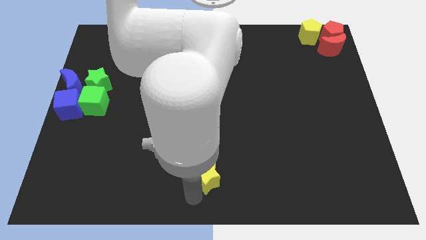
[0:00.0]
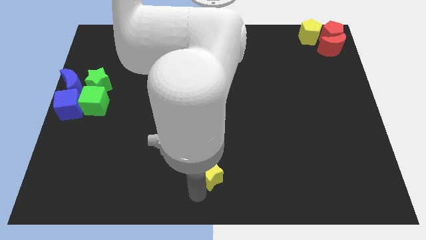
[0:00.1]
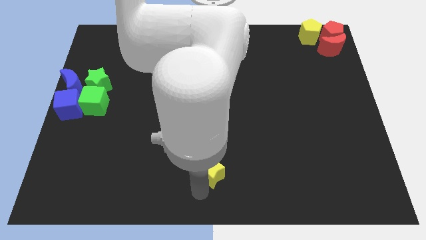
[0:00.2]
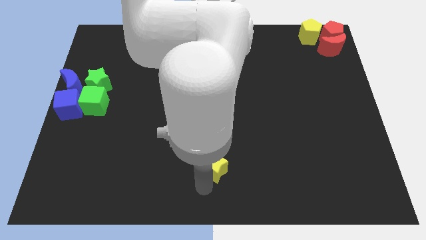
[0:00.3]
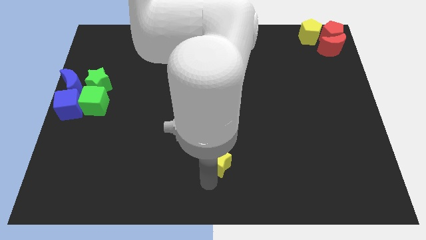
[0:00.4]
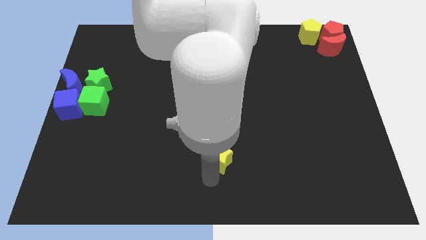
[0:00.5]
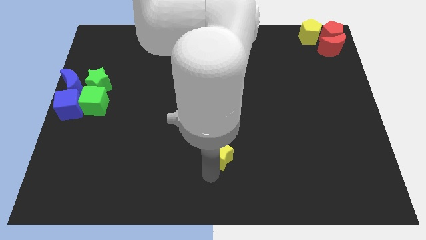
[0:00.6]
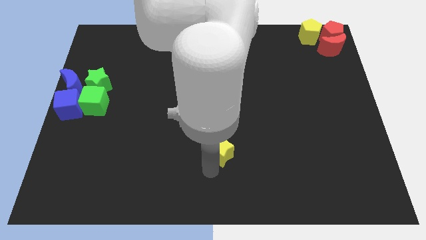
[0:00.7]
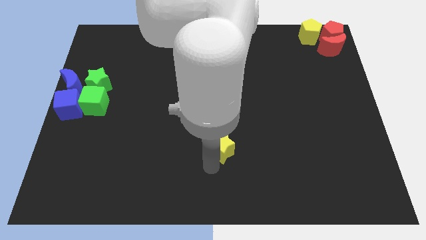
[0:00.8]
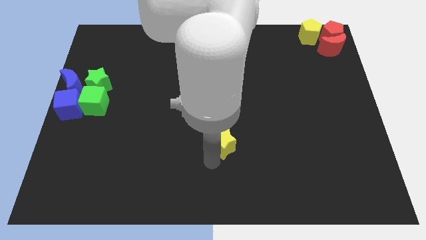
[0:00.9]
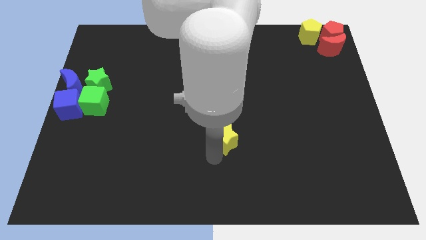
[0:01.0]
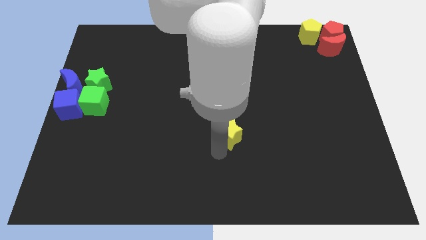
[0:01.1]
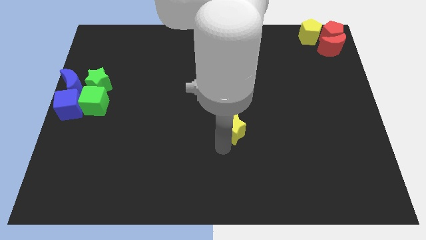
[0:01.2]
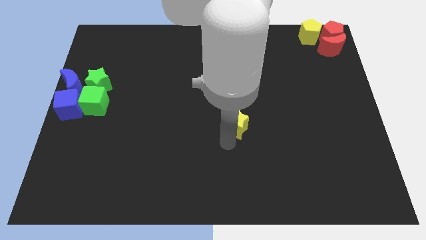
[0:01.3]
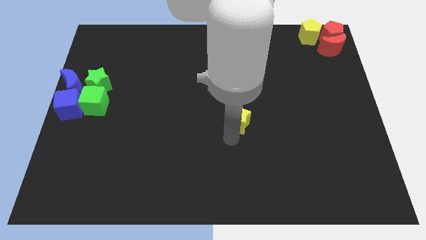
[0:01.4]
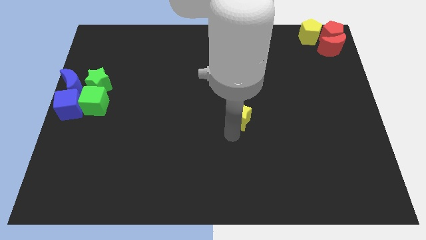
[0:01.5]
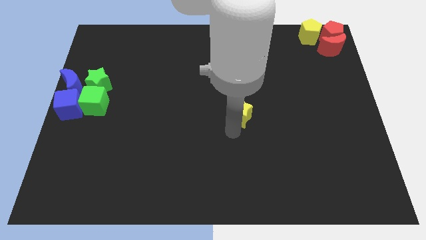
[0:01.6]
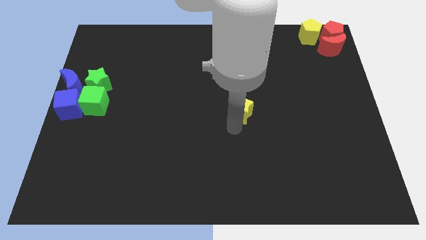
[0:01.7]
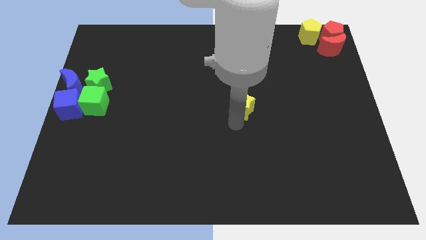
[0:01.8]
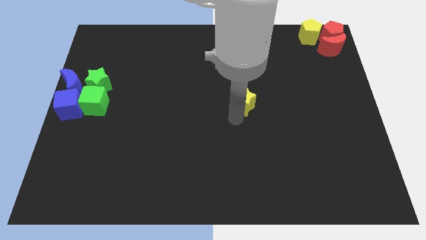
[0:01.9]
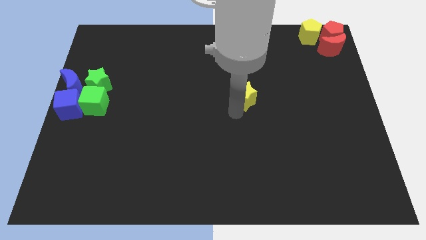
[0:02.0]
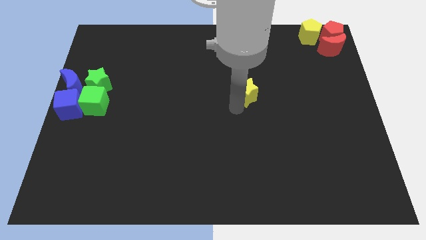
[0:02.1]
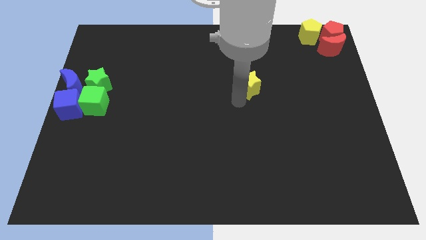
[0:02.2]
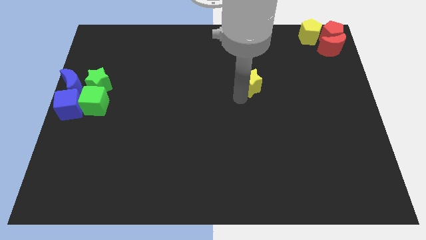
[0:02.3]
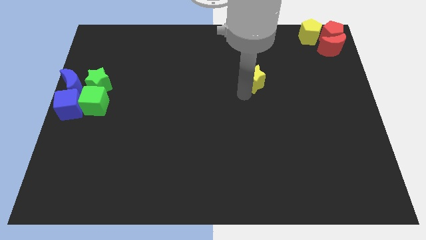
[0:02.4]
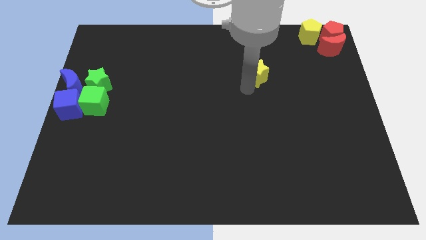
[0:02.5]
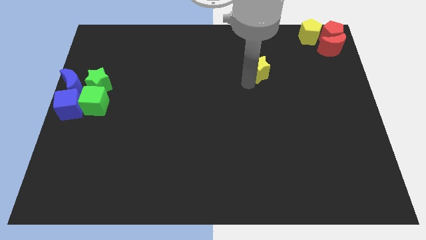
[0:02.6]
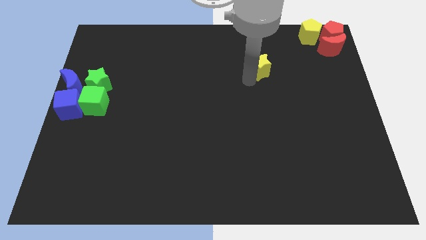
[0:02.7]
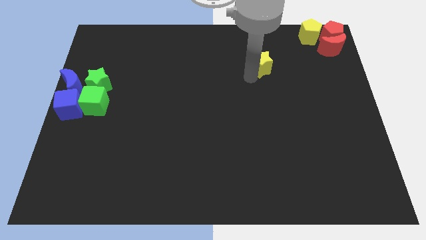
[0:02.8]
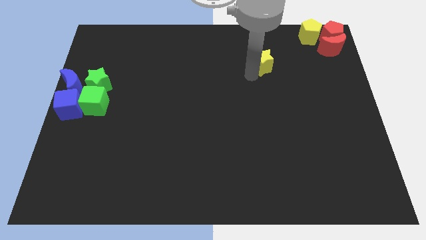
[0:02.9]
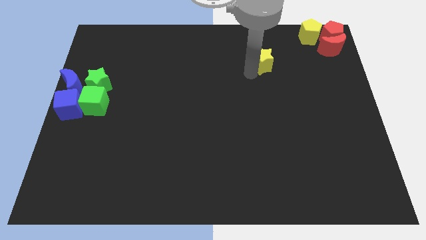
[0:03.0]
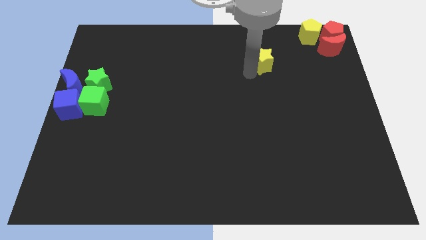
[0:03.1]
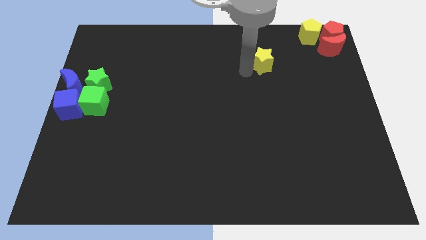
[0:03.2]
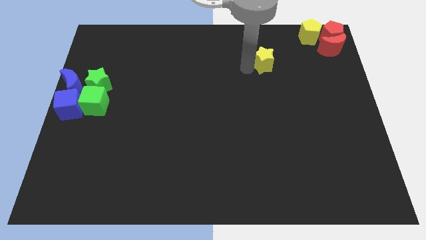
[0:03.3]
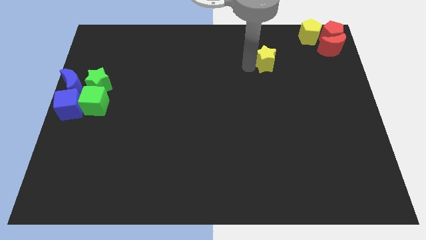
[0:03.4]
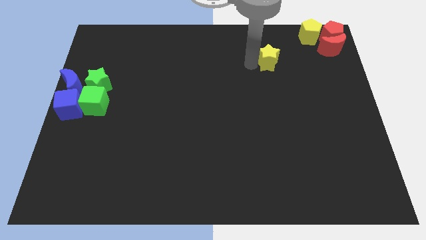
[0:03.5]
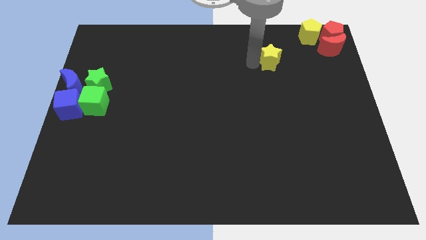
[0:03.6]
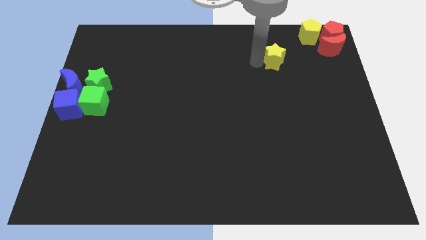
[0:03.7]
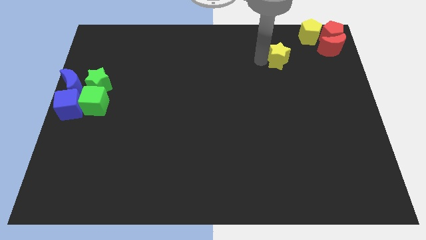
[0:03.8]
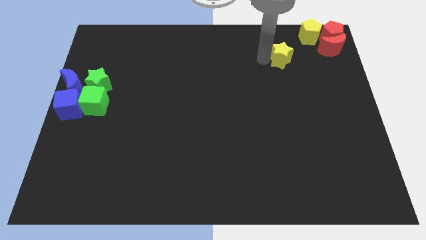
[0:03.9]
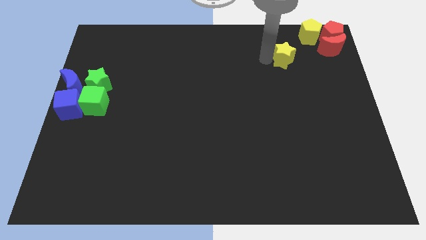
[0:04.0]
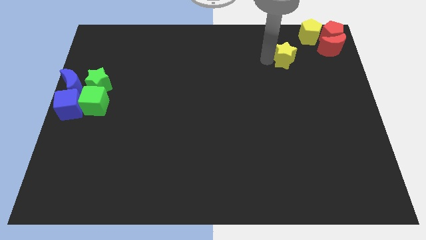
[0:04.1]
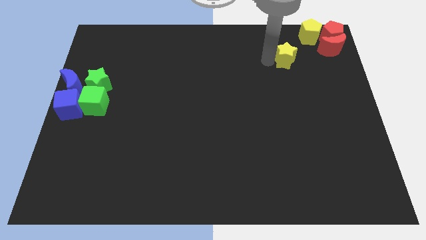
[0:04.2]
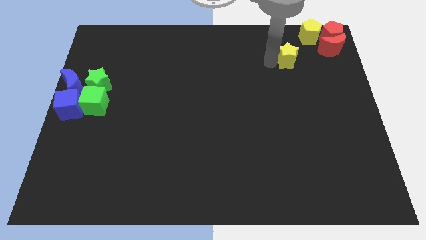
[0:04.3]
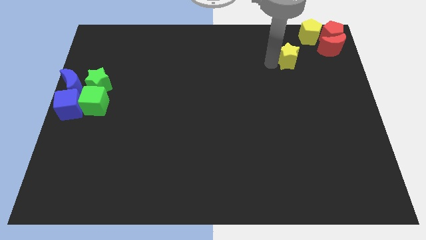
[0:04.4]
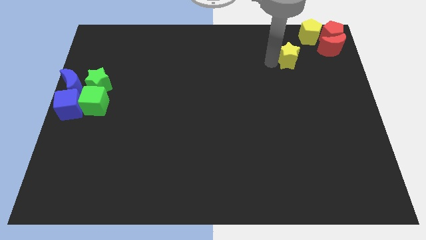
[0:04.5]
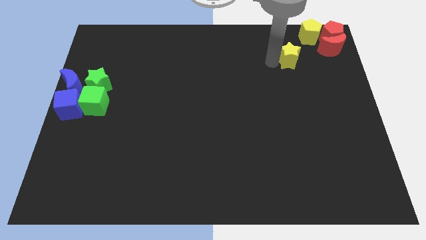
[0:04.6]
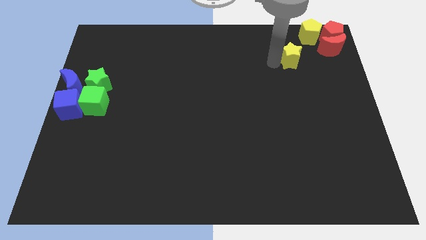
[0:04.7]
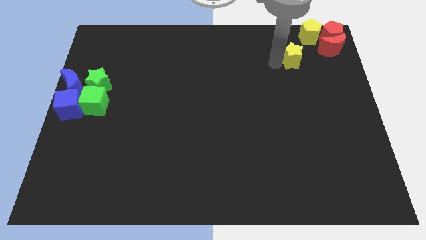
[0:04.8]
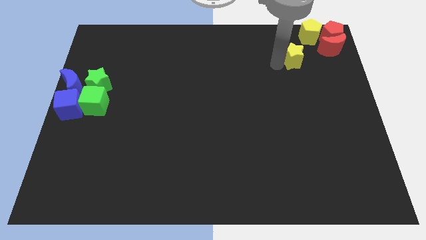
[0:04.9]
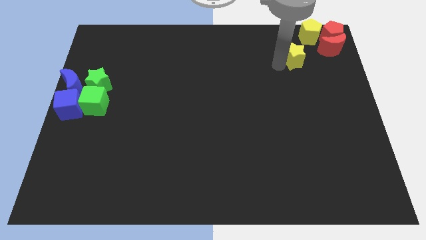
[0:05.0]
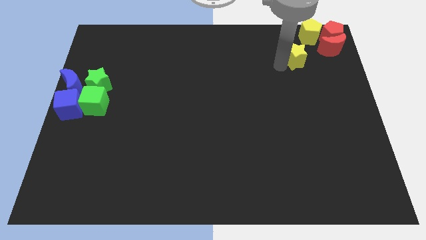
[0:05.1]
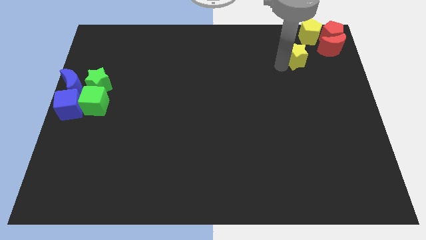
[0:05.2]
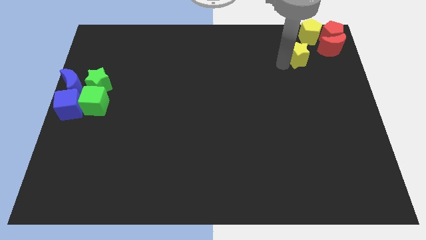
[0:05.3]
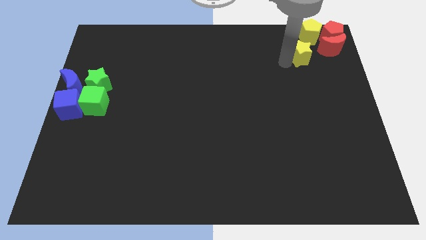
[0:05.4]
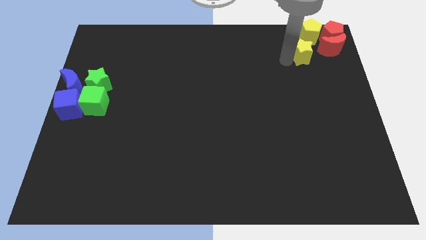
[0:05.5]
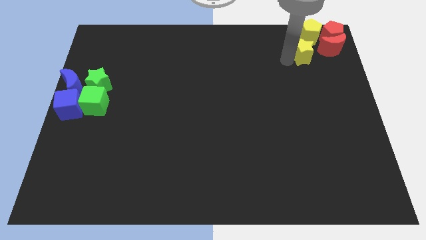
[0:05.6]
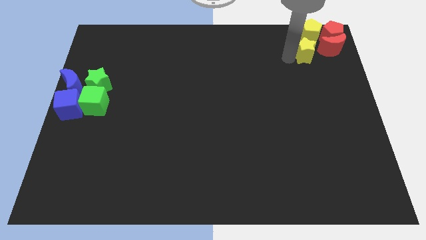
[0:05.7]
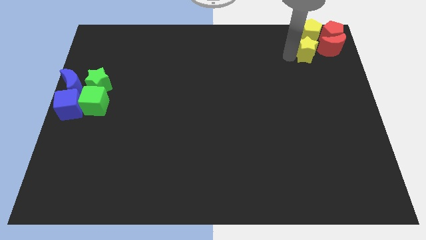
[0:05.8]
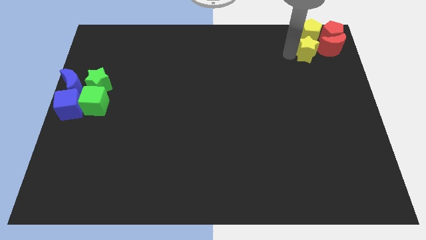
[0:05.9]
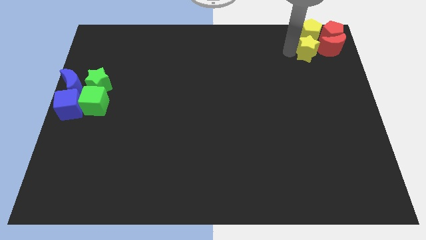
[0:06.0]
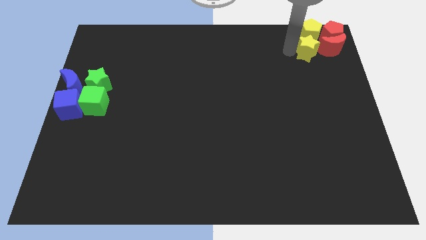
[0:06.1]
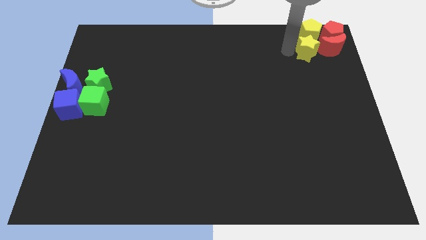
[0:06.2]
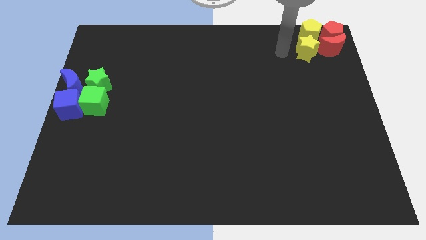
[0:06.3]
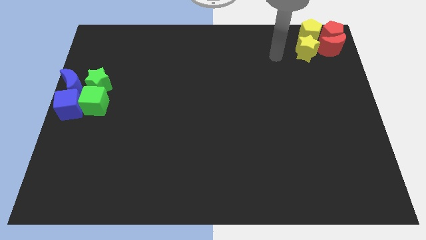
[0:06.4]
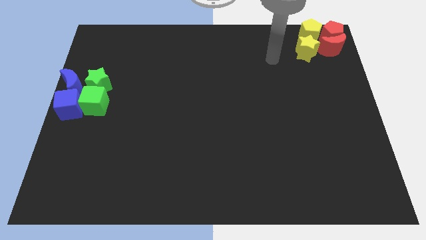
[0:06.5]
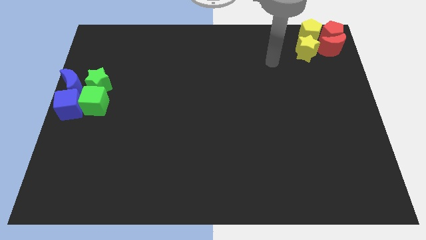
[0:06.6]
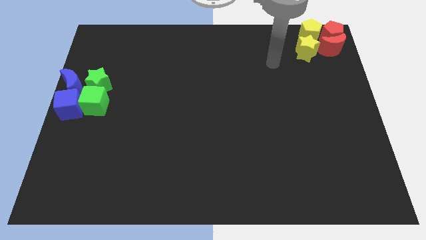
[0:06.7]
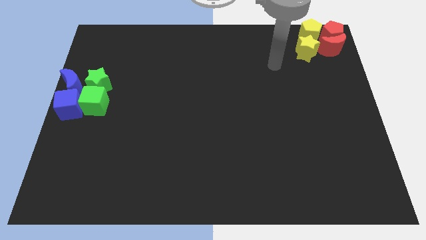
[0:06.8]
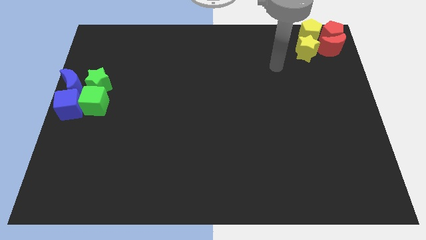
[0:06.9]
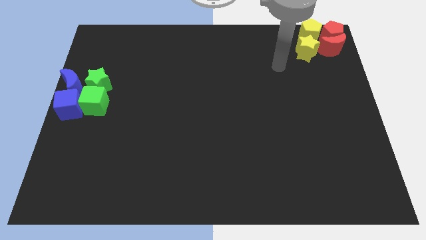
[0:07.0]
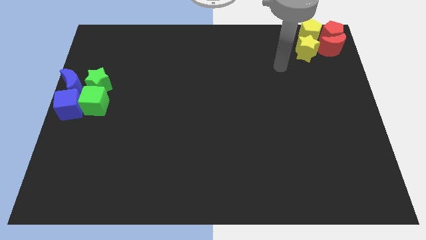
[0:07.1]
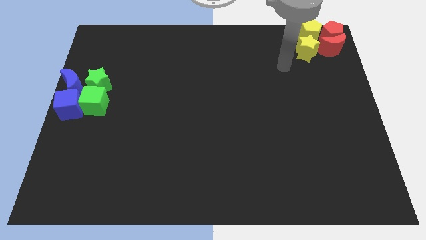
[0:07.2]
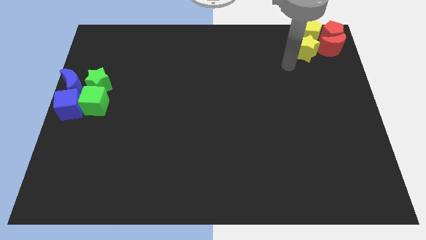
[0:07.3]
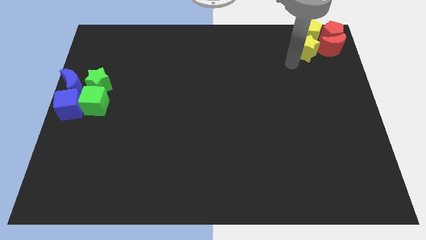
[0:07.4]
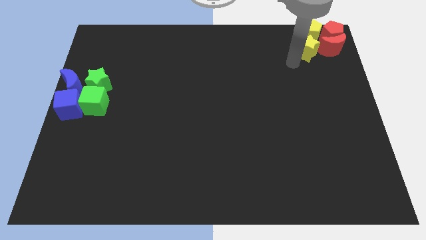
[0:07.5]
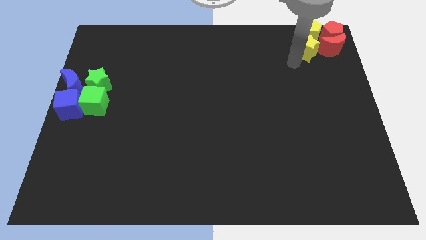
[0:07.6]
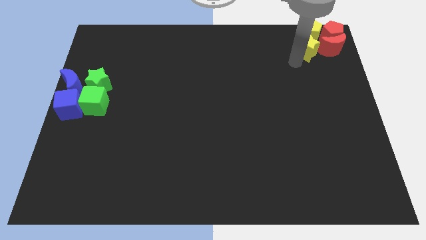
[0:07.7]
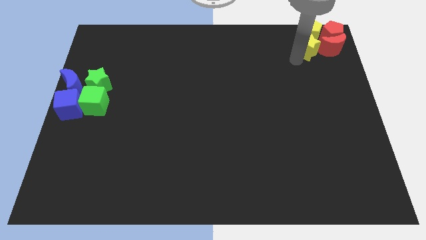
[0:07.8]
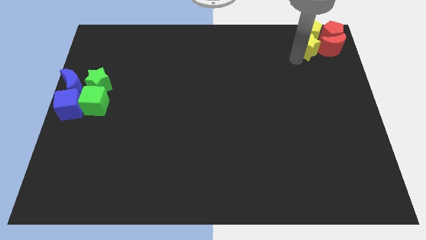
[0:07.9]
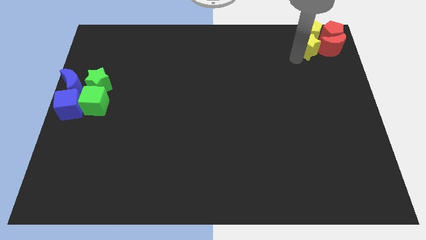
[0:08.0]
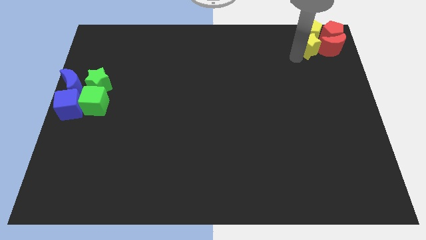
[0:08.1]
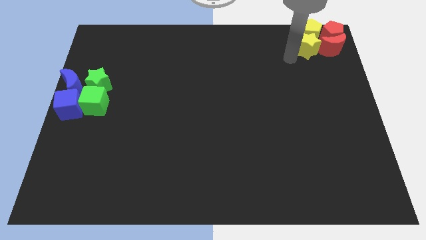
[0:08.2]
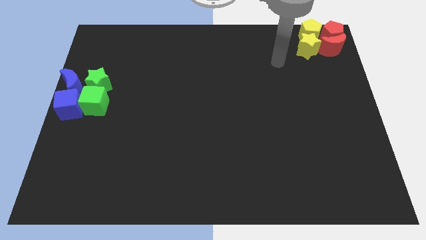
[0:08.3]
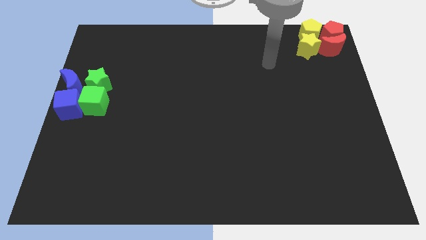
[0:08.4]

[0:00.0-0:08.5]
push the yellow star to the left of red crescent

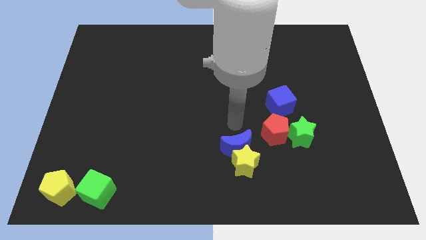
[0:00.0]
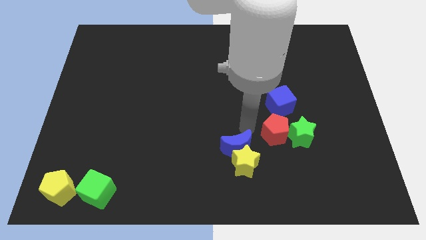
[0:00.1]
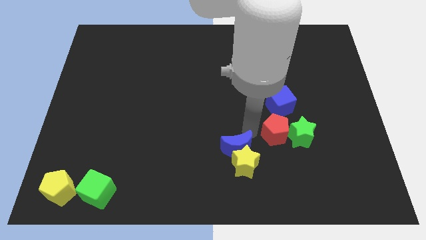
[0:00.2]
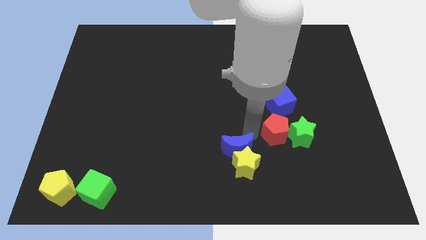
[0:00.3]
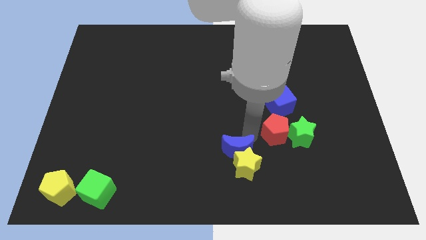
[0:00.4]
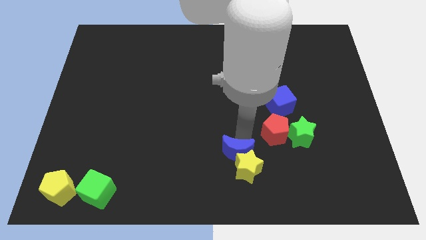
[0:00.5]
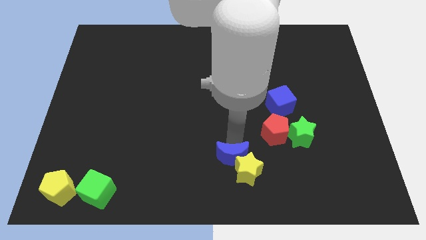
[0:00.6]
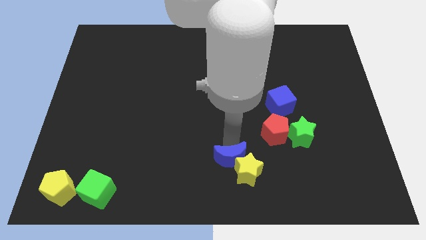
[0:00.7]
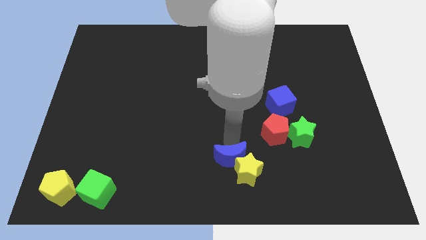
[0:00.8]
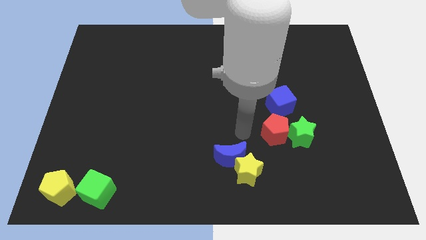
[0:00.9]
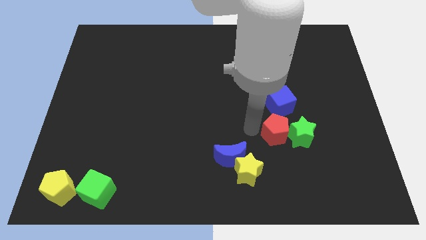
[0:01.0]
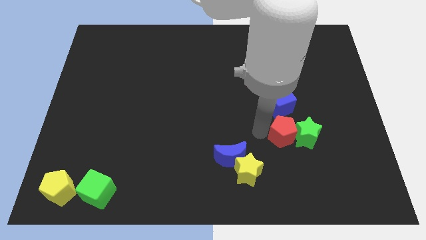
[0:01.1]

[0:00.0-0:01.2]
move blue crescent slightly
